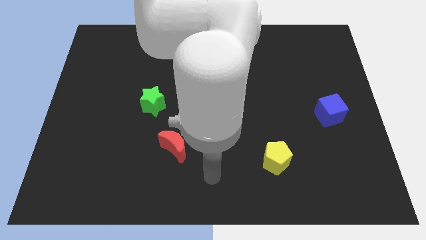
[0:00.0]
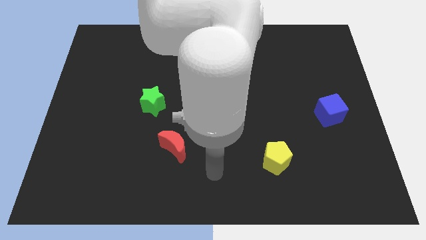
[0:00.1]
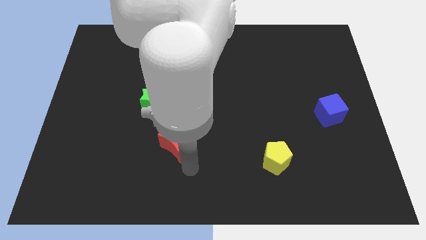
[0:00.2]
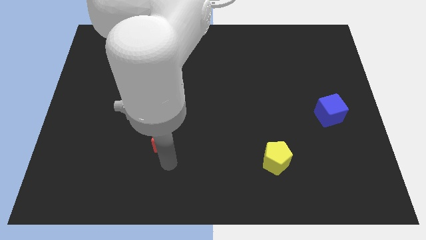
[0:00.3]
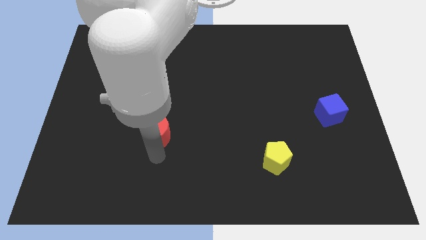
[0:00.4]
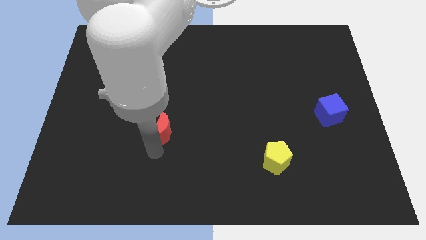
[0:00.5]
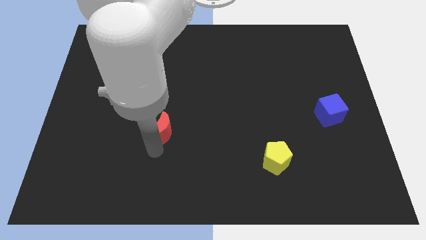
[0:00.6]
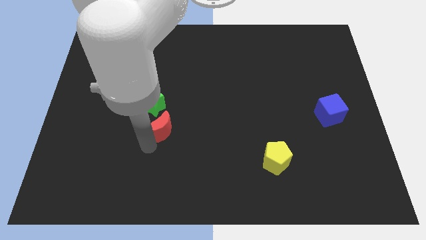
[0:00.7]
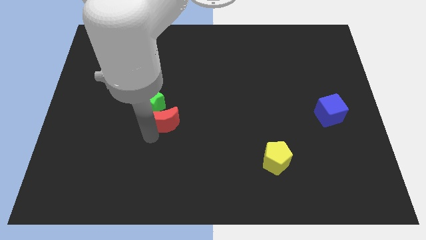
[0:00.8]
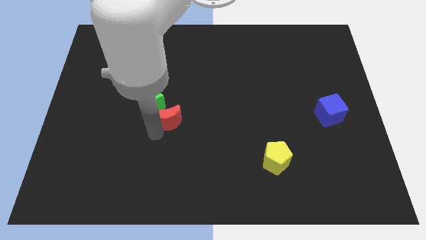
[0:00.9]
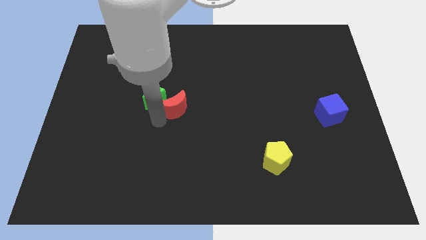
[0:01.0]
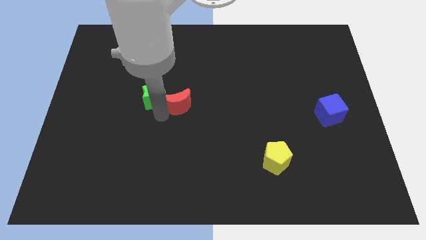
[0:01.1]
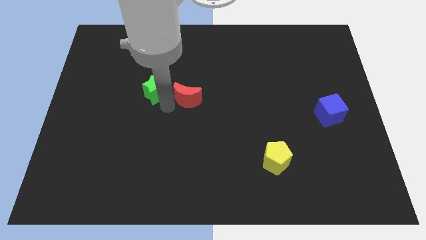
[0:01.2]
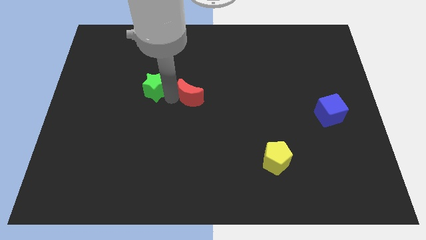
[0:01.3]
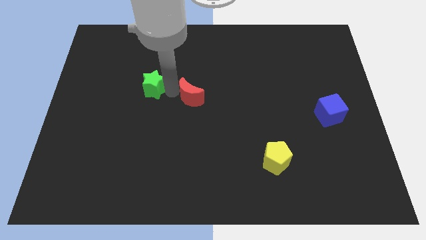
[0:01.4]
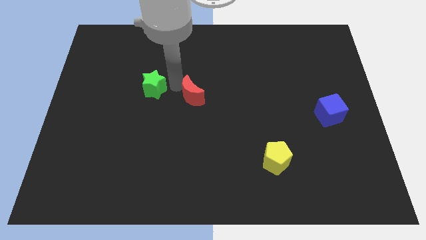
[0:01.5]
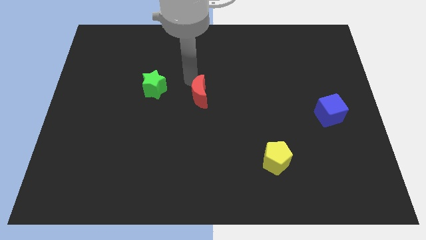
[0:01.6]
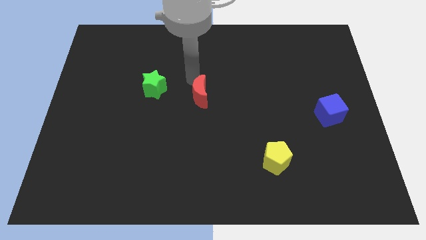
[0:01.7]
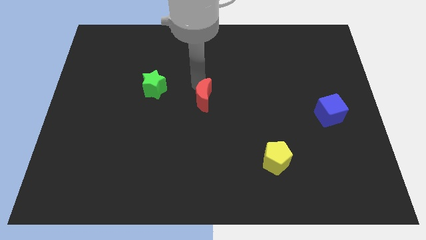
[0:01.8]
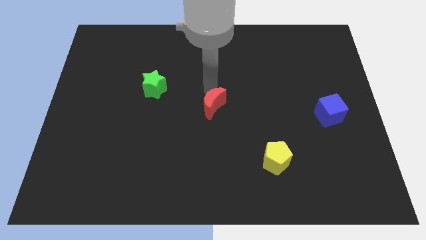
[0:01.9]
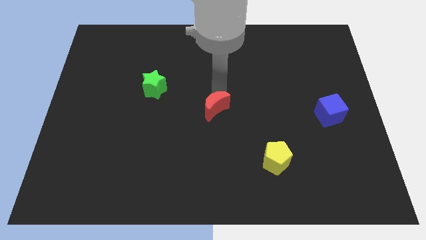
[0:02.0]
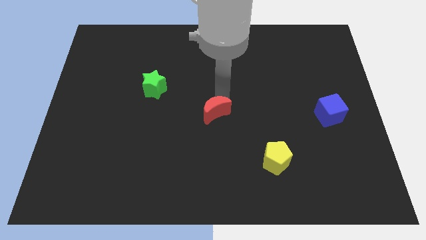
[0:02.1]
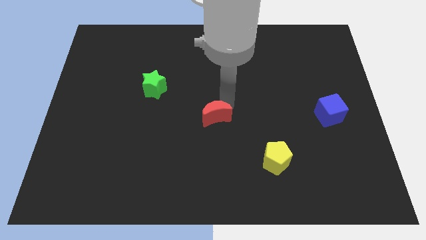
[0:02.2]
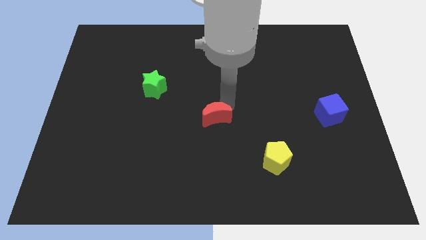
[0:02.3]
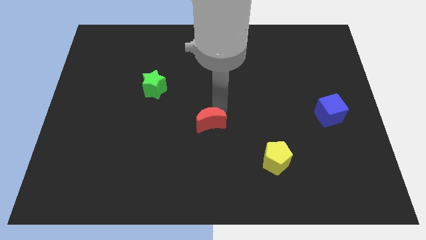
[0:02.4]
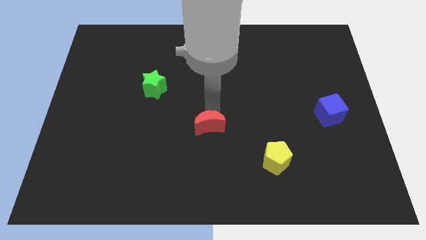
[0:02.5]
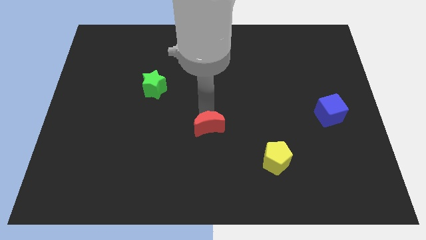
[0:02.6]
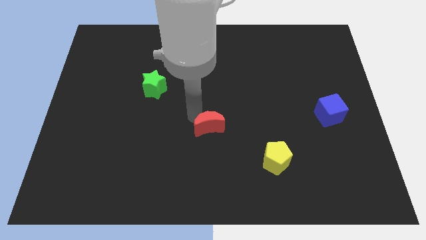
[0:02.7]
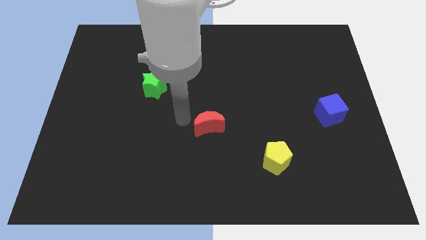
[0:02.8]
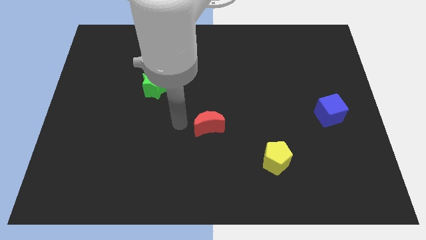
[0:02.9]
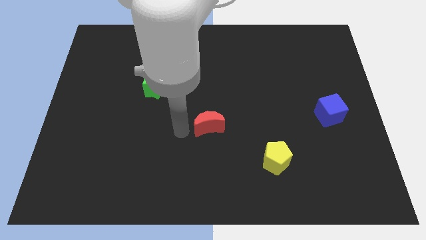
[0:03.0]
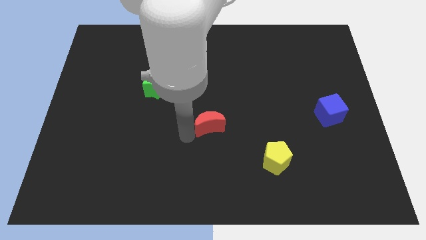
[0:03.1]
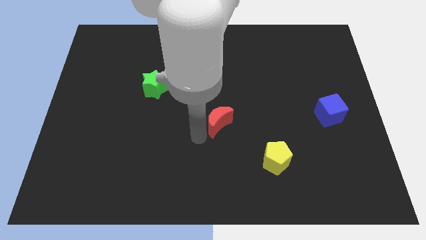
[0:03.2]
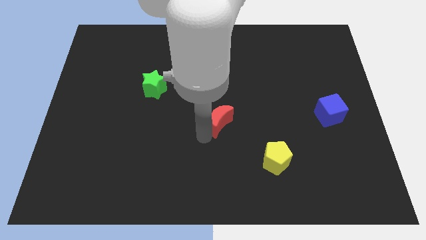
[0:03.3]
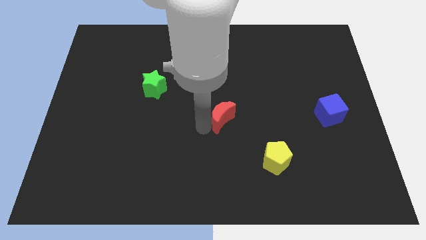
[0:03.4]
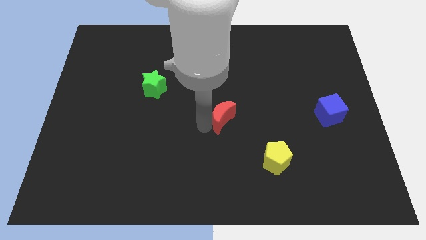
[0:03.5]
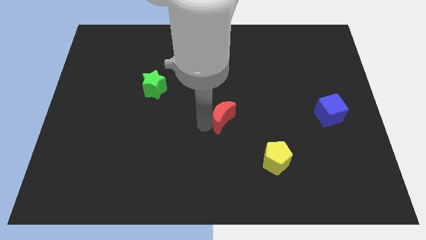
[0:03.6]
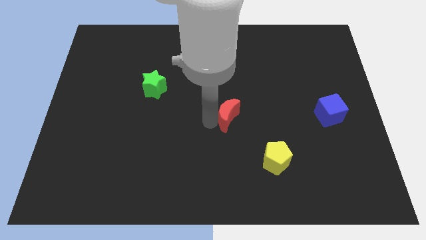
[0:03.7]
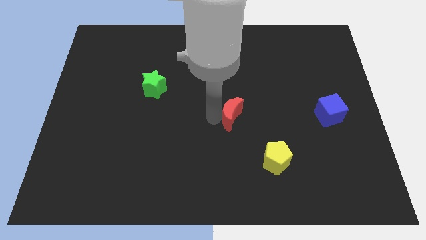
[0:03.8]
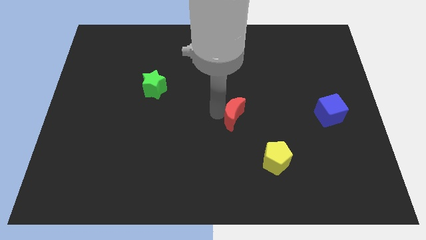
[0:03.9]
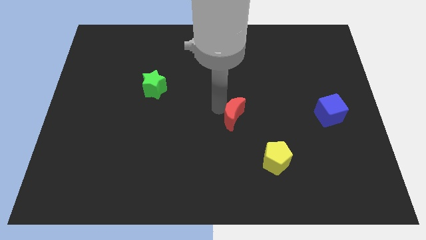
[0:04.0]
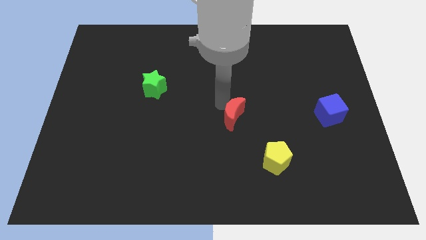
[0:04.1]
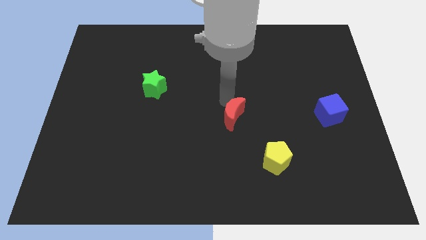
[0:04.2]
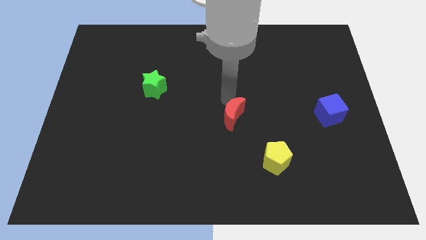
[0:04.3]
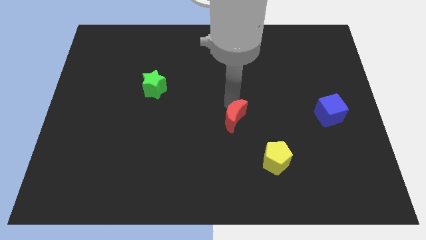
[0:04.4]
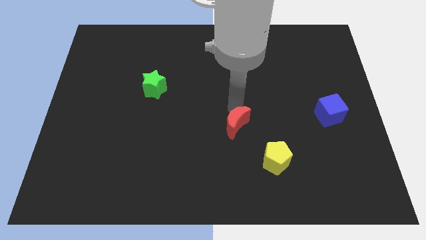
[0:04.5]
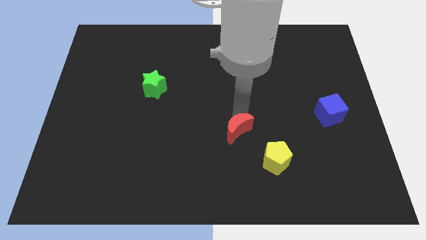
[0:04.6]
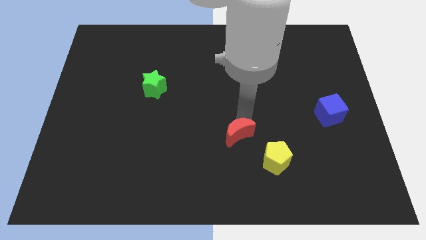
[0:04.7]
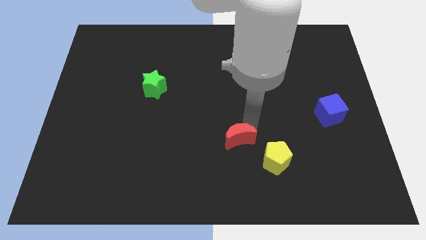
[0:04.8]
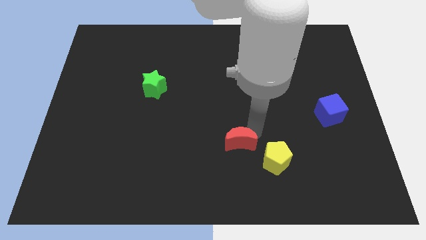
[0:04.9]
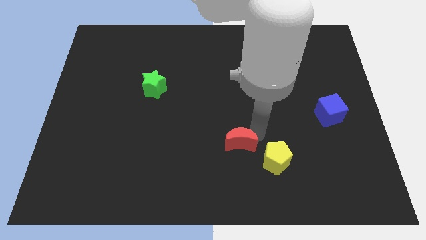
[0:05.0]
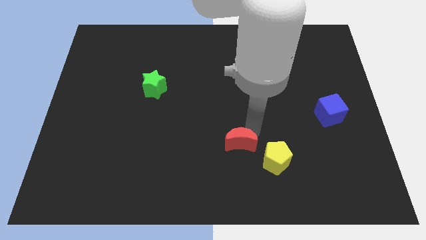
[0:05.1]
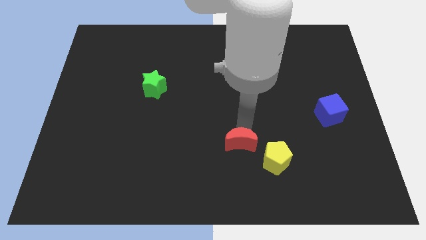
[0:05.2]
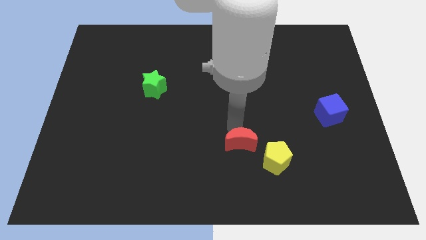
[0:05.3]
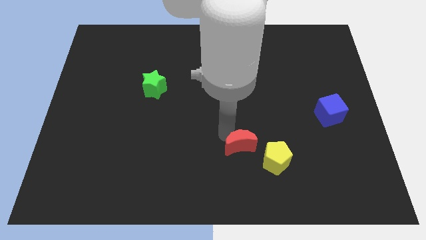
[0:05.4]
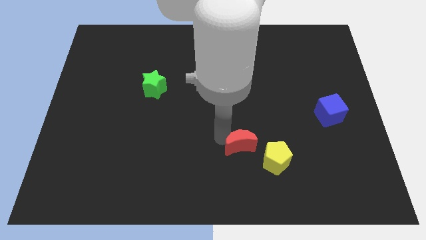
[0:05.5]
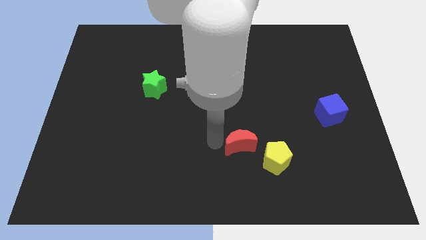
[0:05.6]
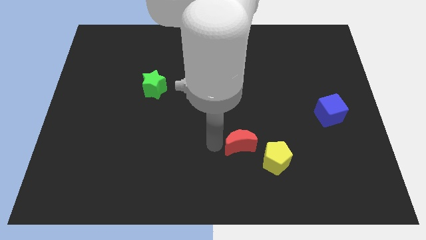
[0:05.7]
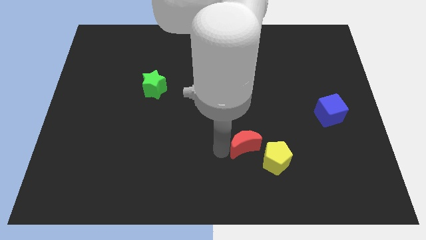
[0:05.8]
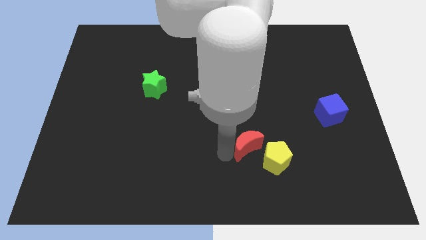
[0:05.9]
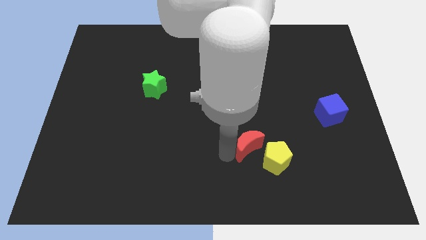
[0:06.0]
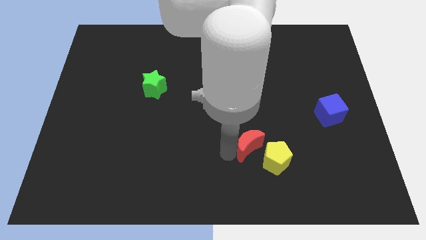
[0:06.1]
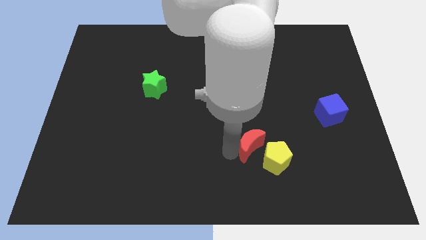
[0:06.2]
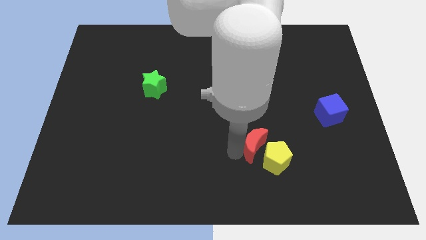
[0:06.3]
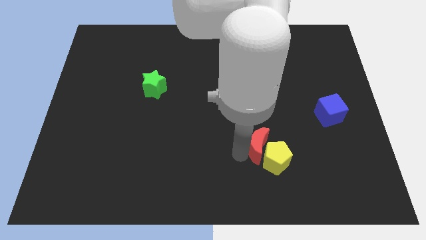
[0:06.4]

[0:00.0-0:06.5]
push the moon close to the yellow block

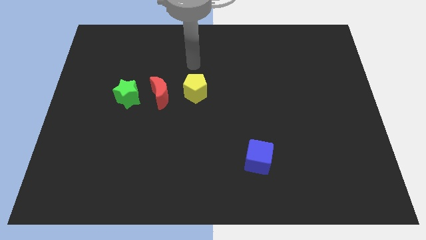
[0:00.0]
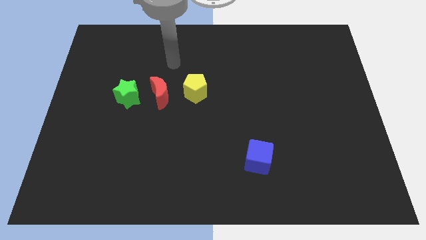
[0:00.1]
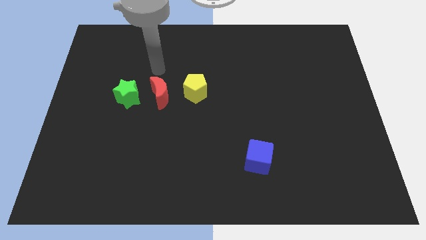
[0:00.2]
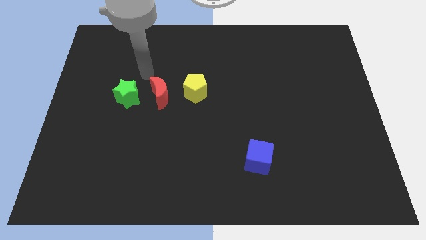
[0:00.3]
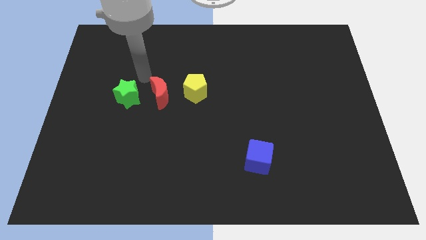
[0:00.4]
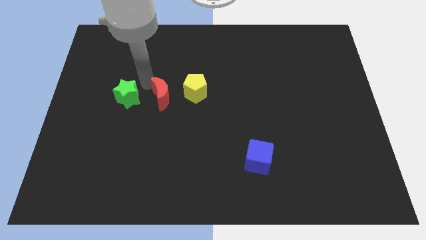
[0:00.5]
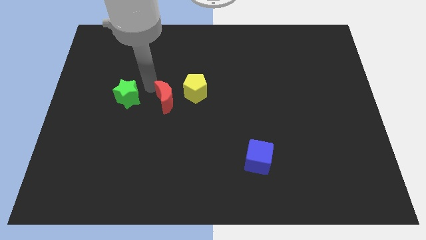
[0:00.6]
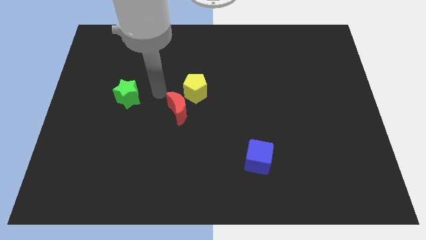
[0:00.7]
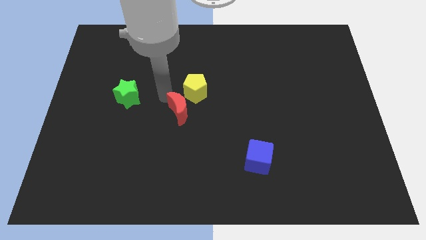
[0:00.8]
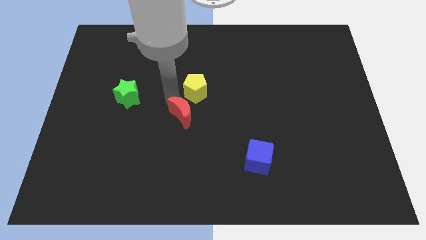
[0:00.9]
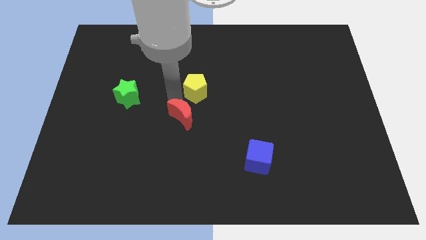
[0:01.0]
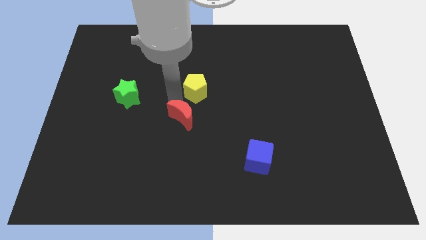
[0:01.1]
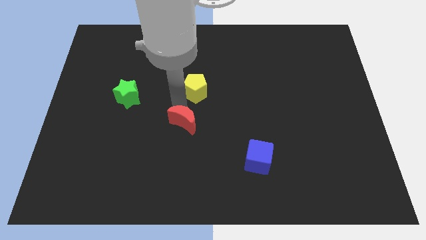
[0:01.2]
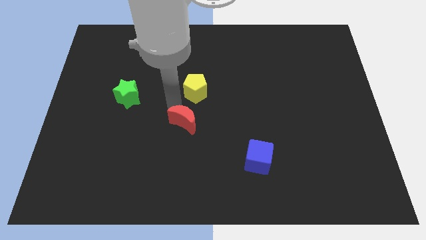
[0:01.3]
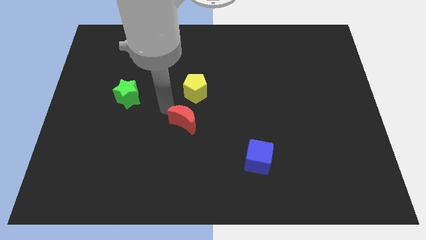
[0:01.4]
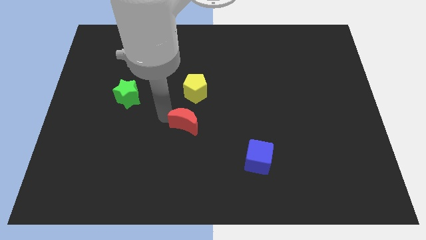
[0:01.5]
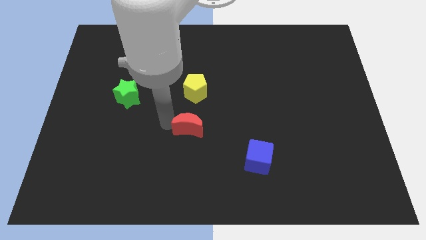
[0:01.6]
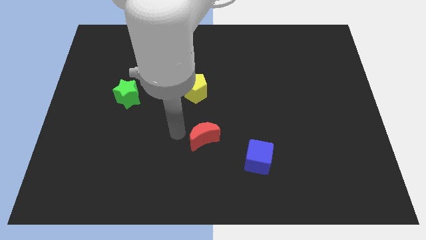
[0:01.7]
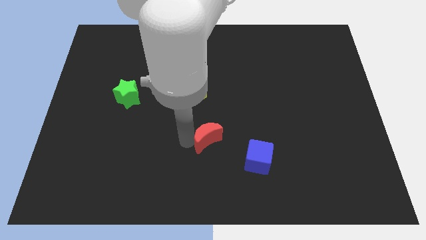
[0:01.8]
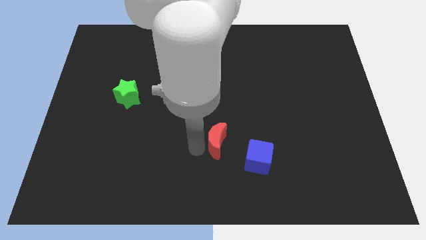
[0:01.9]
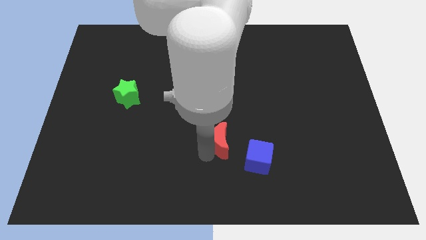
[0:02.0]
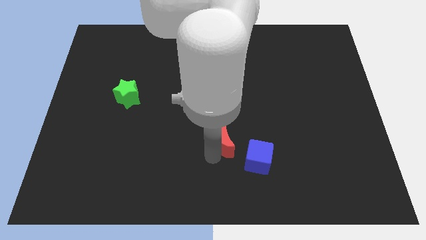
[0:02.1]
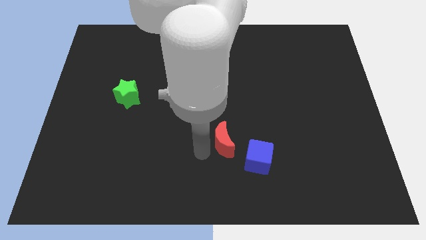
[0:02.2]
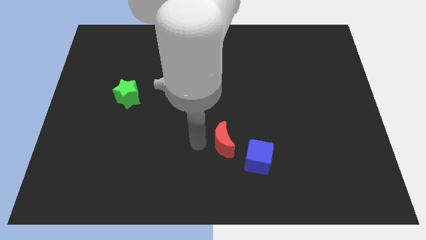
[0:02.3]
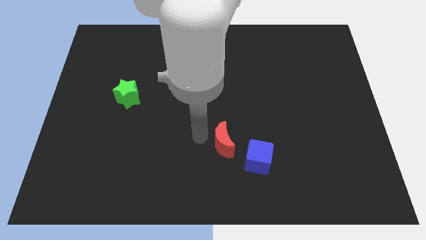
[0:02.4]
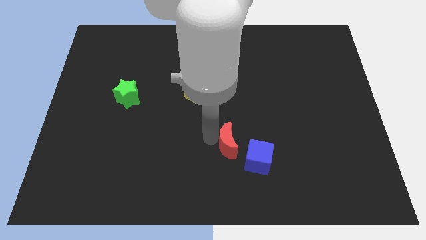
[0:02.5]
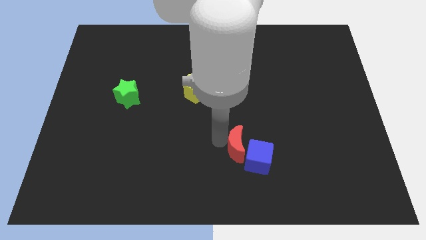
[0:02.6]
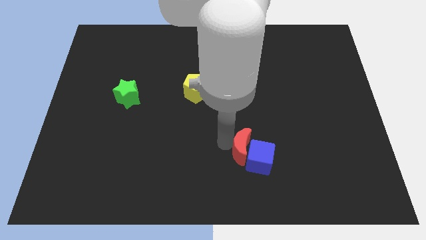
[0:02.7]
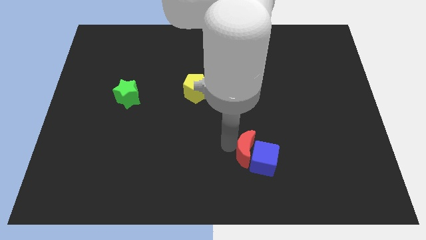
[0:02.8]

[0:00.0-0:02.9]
slide the moon close to the blue block
